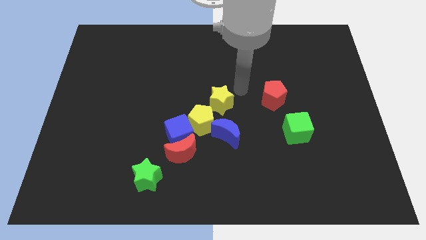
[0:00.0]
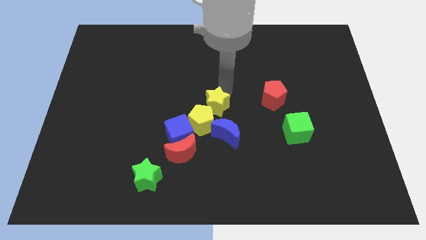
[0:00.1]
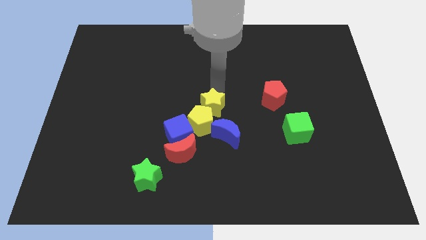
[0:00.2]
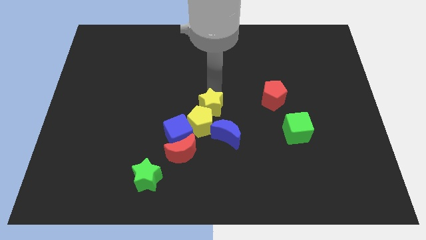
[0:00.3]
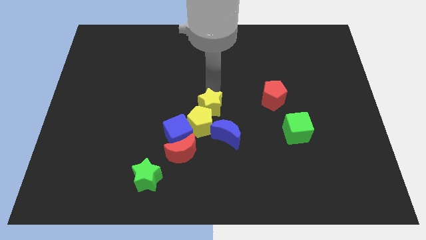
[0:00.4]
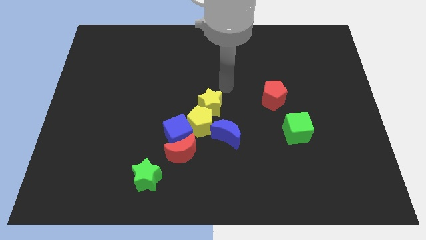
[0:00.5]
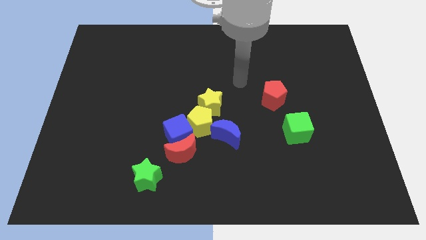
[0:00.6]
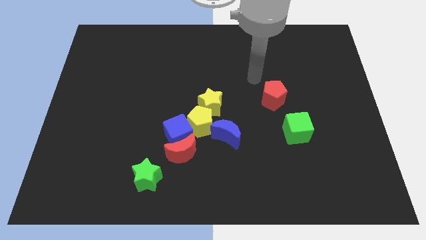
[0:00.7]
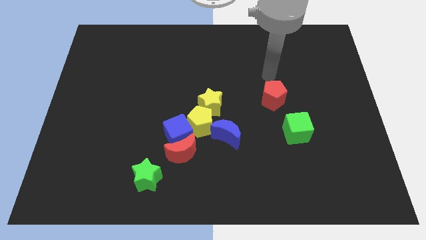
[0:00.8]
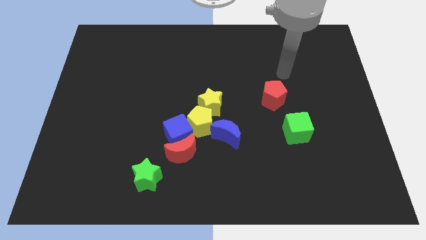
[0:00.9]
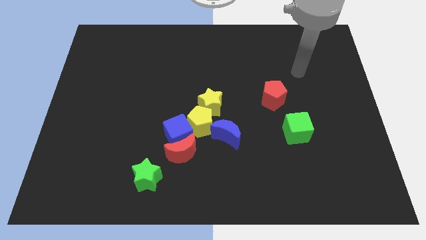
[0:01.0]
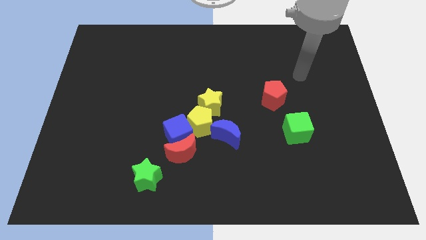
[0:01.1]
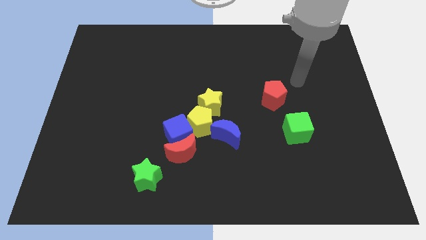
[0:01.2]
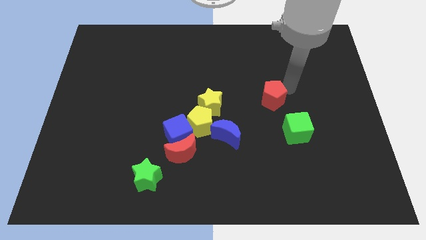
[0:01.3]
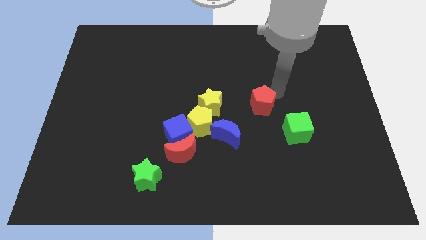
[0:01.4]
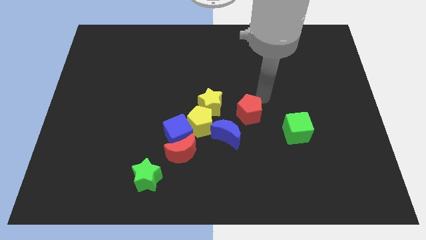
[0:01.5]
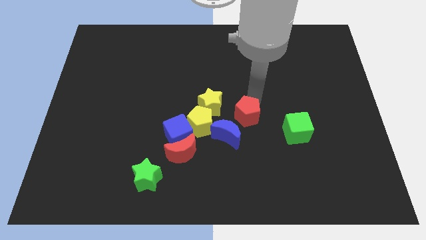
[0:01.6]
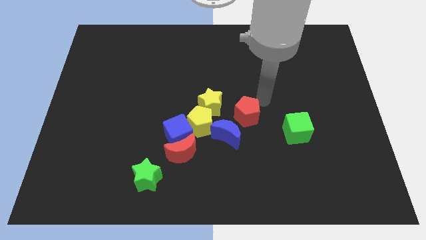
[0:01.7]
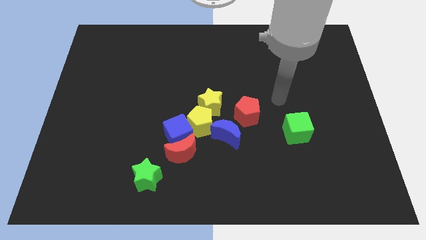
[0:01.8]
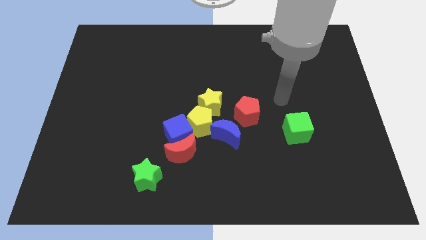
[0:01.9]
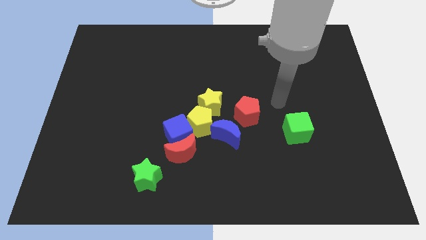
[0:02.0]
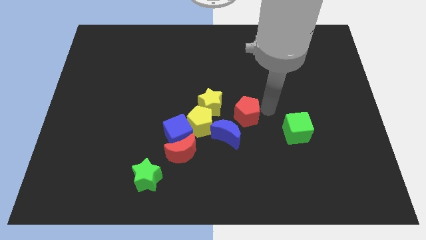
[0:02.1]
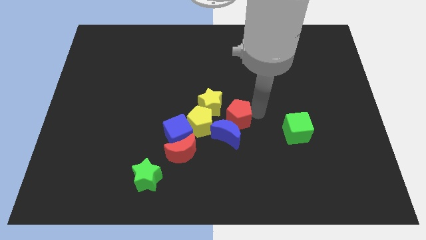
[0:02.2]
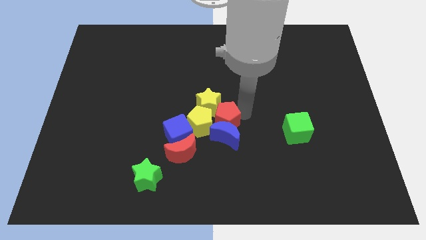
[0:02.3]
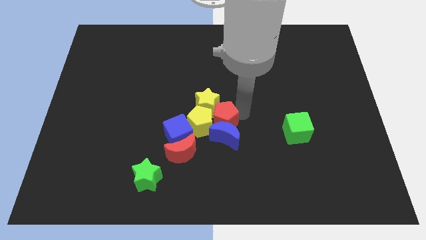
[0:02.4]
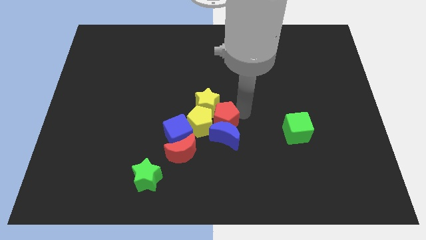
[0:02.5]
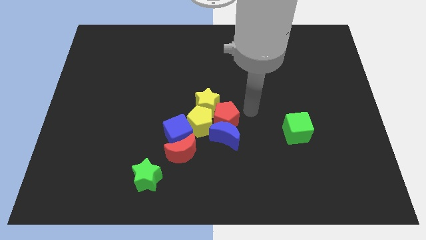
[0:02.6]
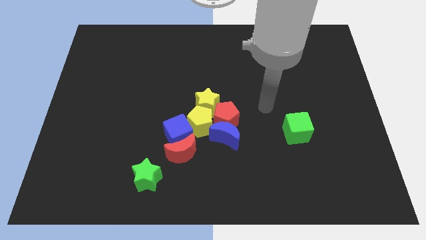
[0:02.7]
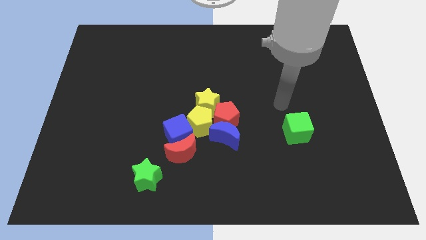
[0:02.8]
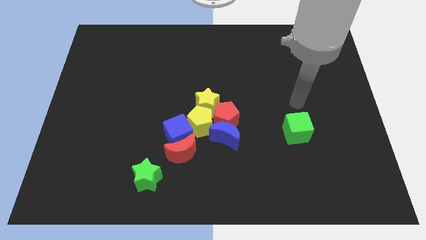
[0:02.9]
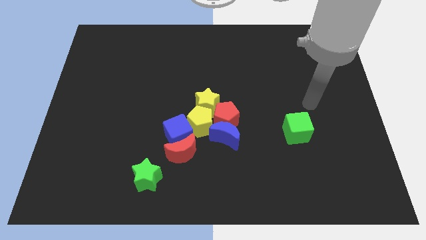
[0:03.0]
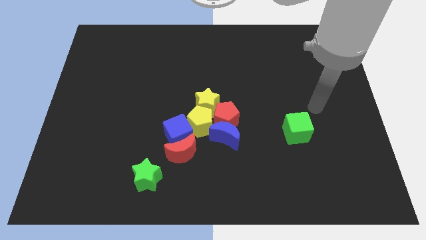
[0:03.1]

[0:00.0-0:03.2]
slide the red pentagon into the blue moon

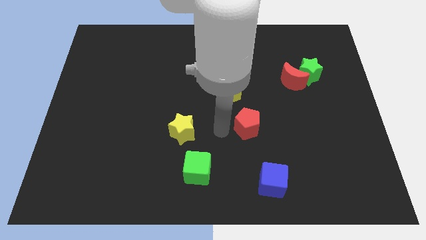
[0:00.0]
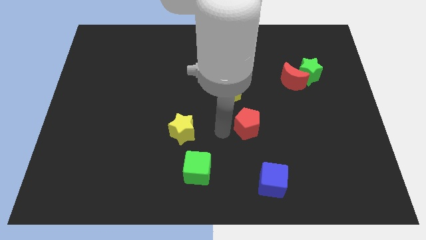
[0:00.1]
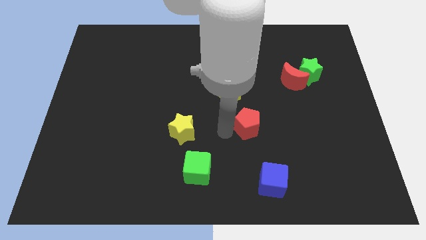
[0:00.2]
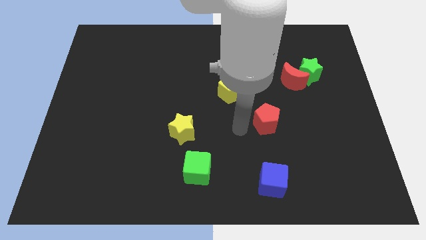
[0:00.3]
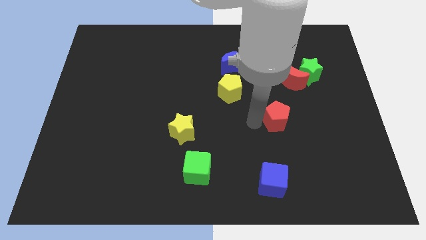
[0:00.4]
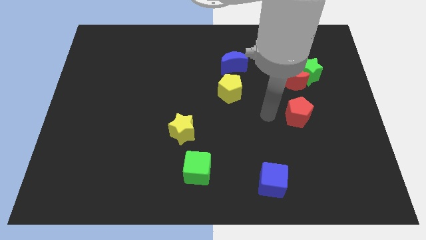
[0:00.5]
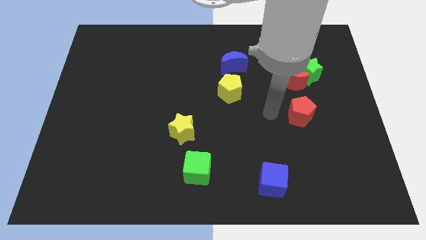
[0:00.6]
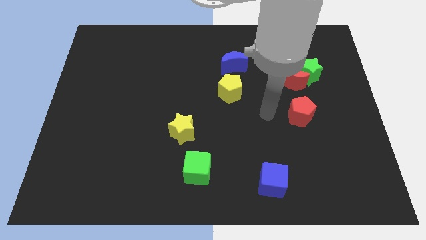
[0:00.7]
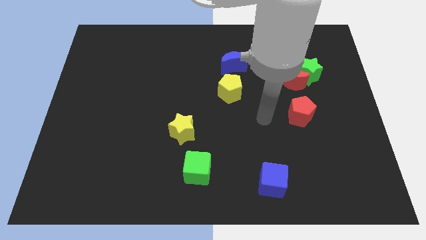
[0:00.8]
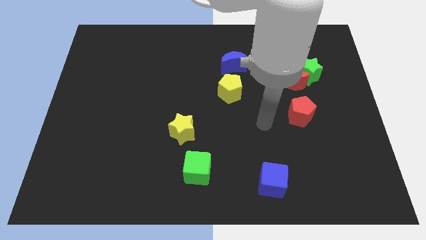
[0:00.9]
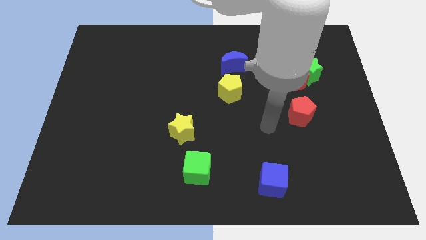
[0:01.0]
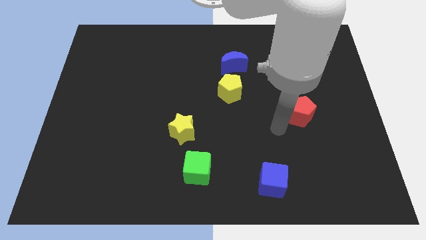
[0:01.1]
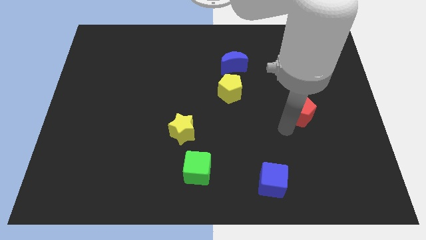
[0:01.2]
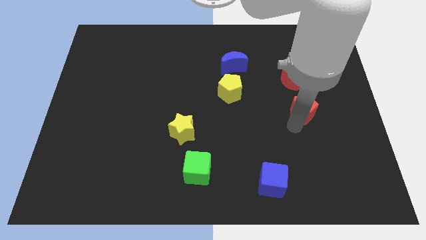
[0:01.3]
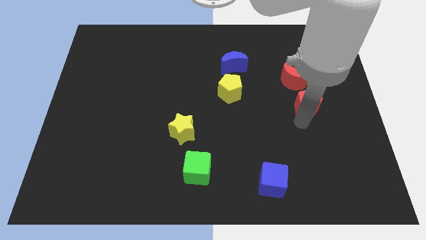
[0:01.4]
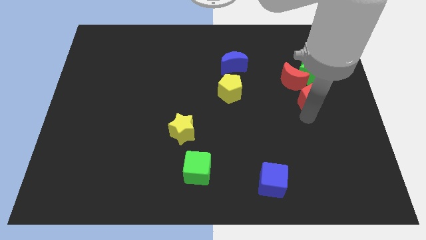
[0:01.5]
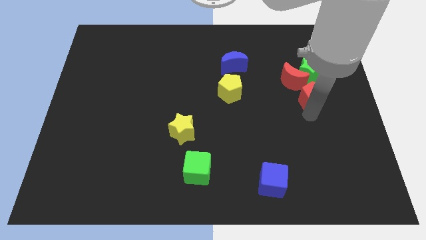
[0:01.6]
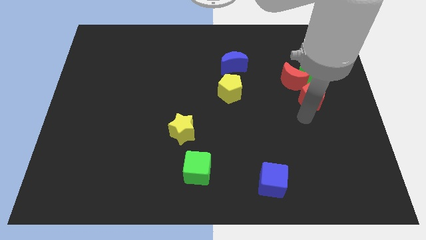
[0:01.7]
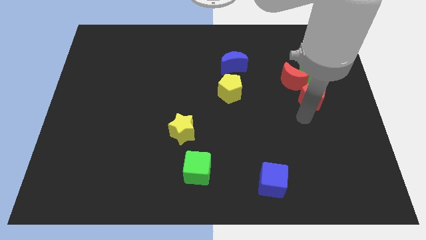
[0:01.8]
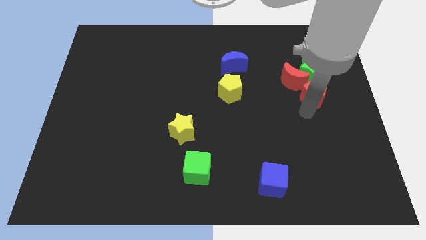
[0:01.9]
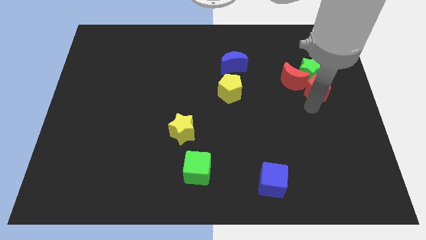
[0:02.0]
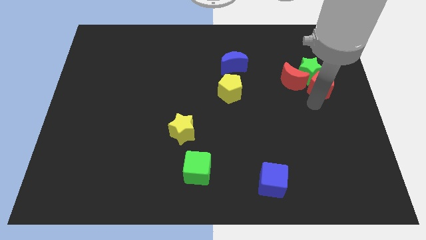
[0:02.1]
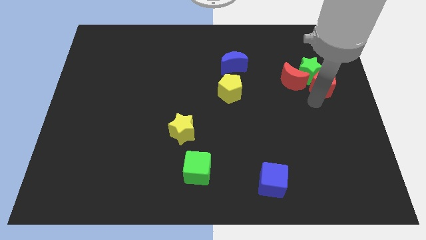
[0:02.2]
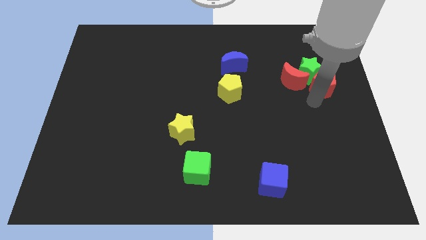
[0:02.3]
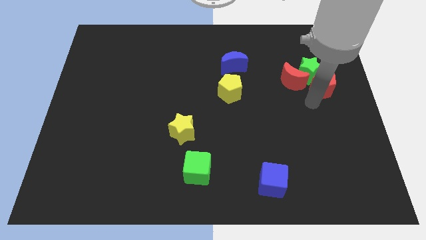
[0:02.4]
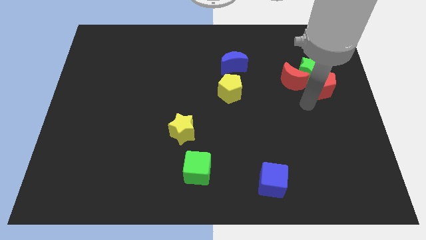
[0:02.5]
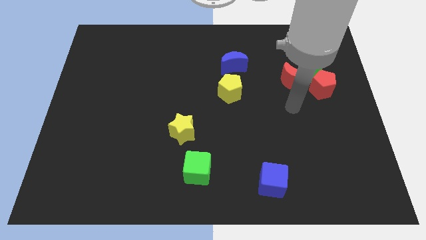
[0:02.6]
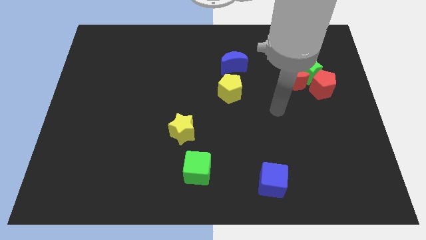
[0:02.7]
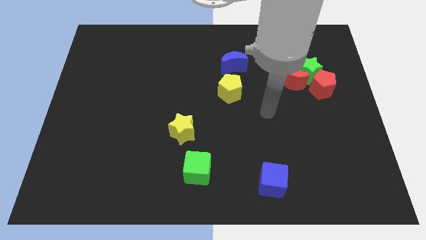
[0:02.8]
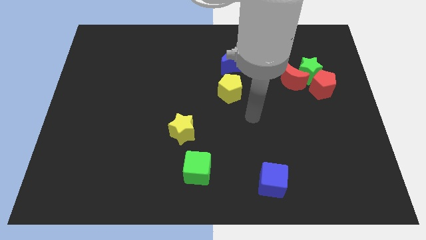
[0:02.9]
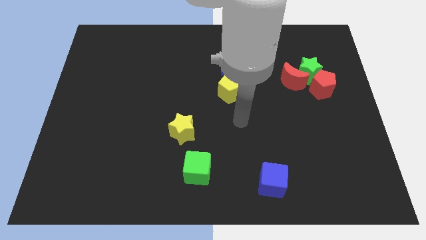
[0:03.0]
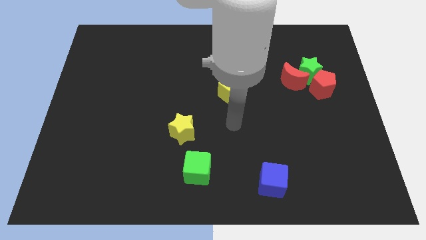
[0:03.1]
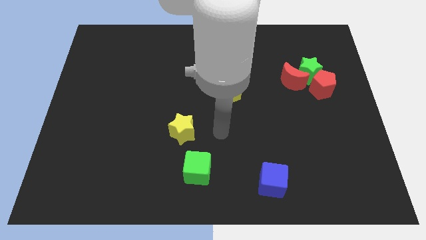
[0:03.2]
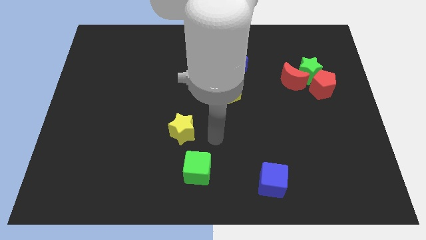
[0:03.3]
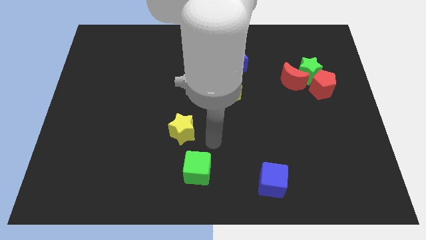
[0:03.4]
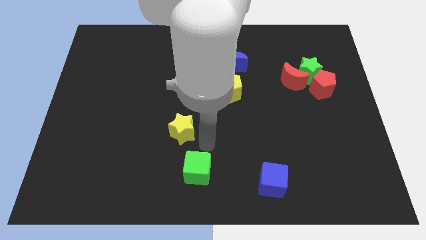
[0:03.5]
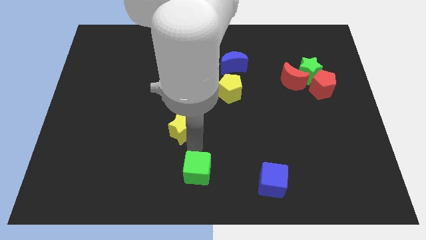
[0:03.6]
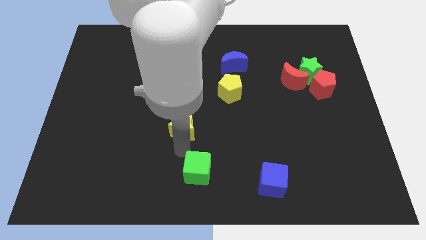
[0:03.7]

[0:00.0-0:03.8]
place red pentagon to bottom right to green star

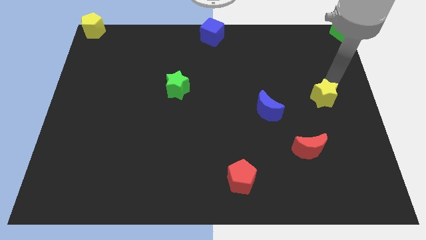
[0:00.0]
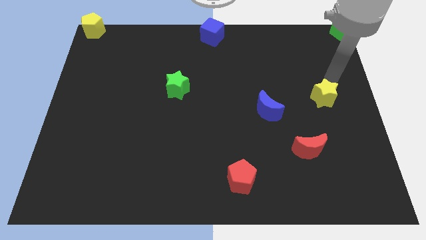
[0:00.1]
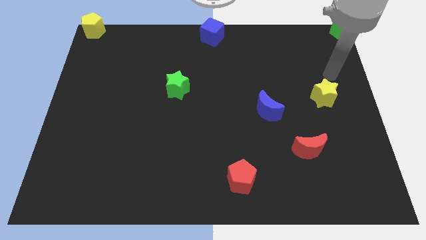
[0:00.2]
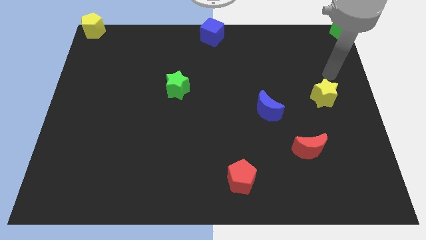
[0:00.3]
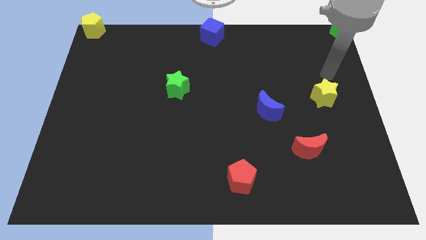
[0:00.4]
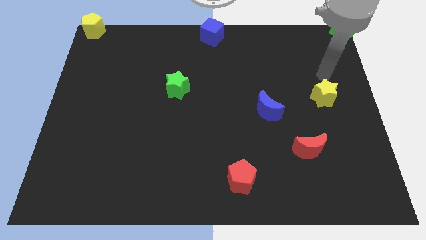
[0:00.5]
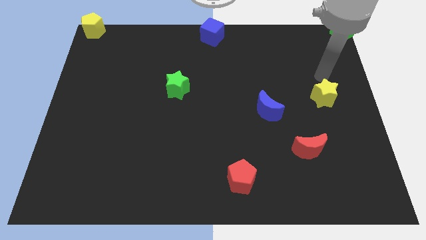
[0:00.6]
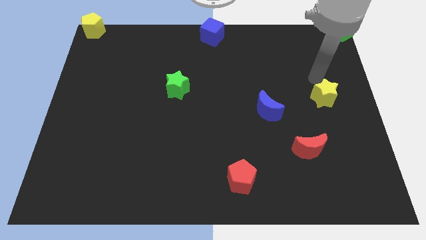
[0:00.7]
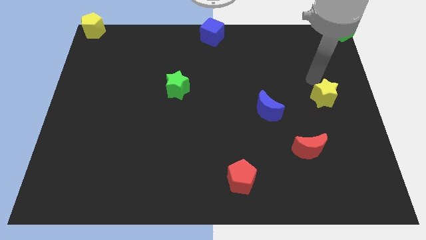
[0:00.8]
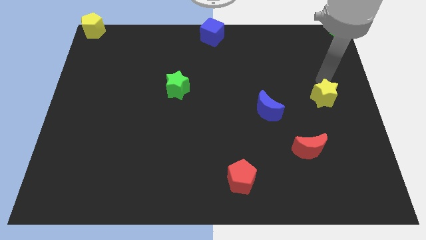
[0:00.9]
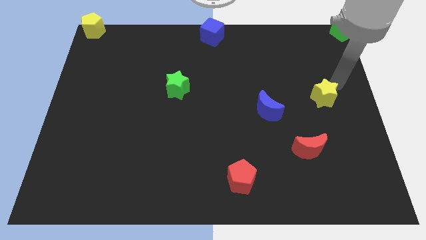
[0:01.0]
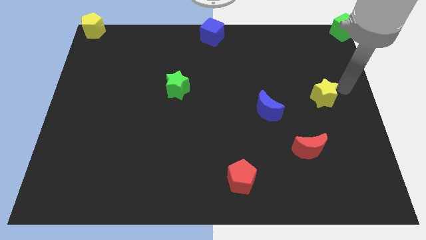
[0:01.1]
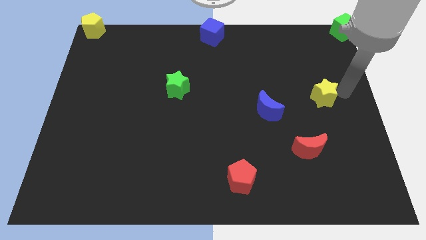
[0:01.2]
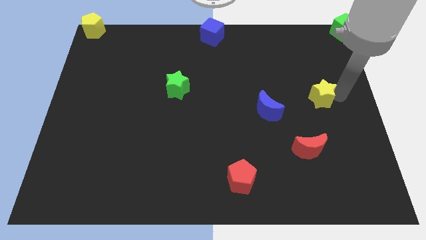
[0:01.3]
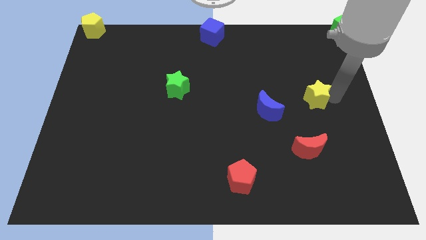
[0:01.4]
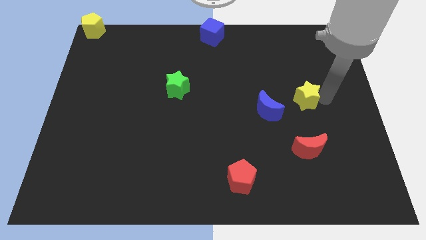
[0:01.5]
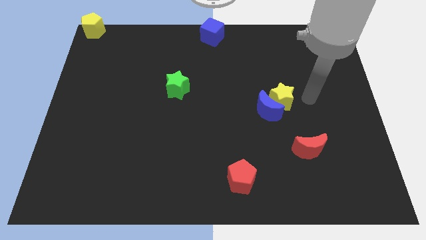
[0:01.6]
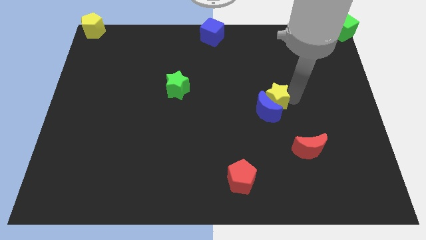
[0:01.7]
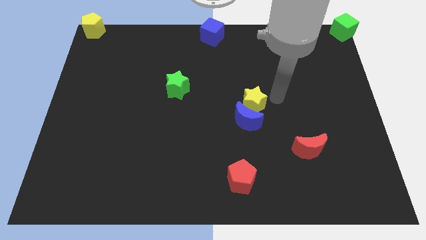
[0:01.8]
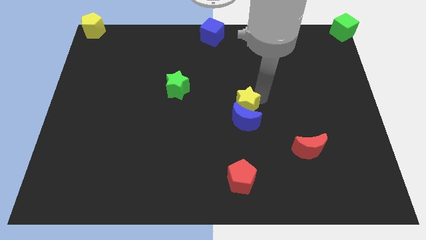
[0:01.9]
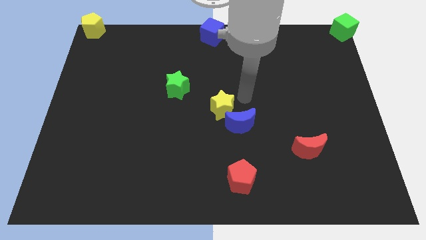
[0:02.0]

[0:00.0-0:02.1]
move the yellow star to the top side of the blue moon
